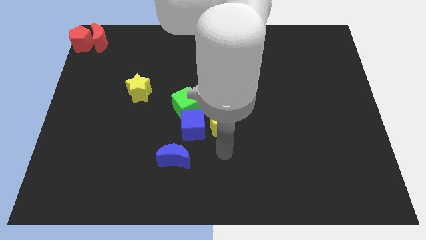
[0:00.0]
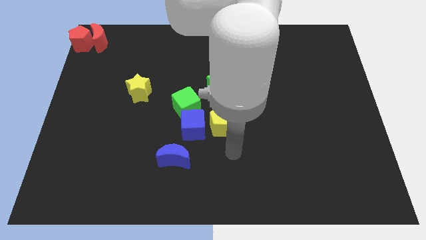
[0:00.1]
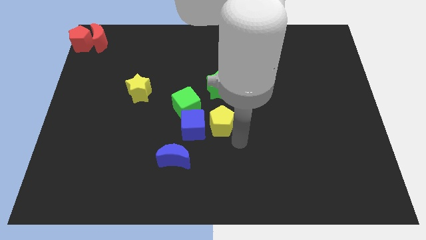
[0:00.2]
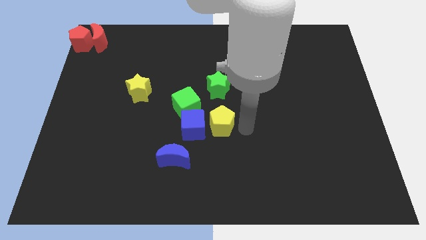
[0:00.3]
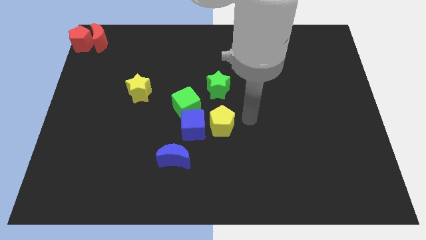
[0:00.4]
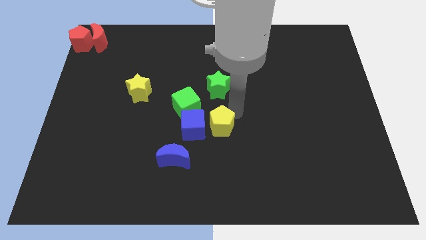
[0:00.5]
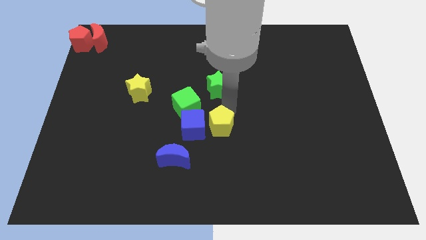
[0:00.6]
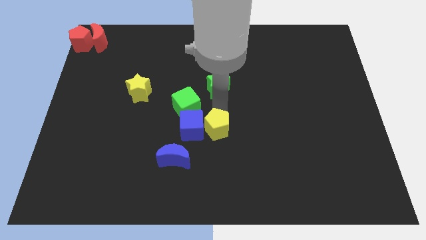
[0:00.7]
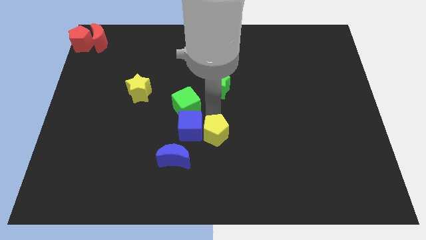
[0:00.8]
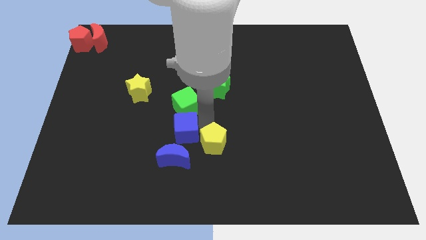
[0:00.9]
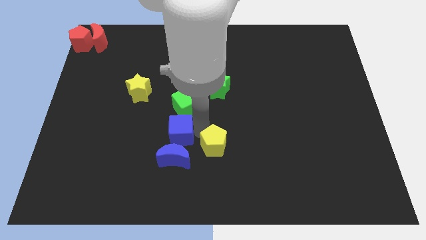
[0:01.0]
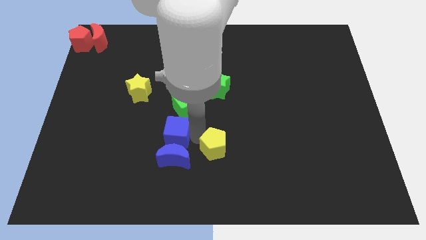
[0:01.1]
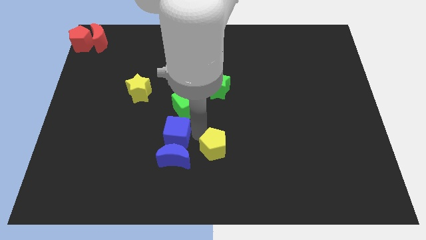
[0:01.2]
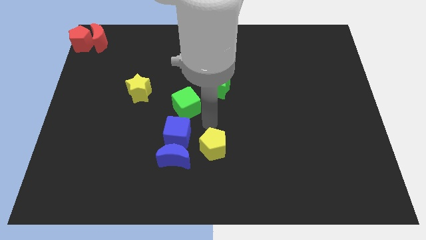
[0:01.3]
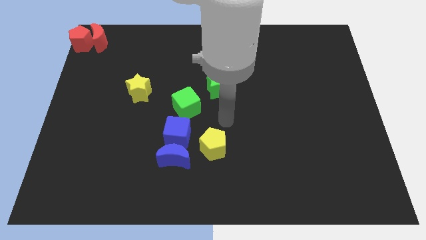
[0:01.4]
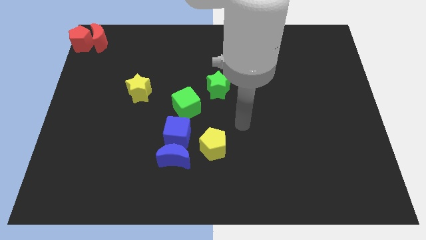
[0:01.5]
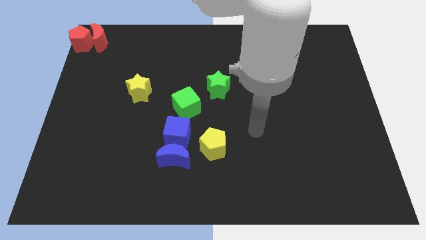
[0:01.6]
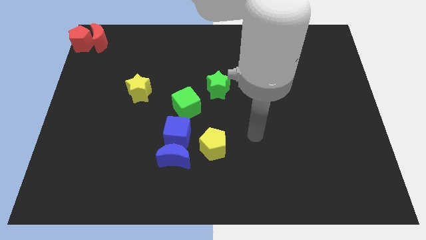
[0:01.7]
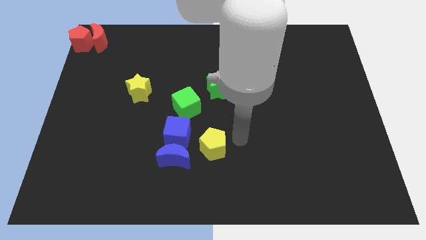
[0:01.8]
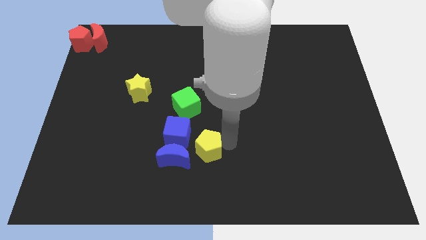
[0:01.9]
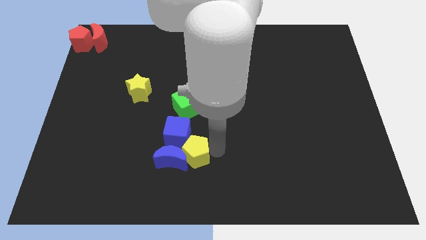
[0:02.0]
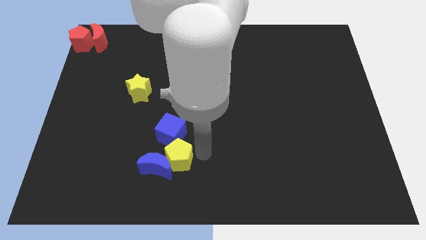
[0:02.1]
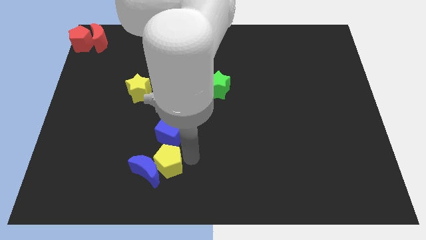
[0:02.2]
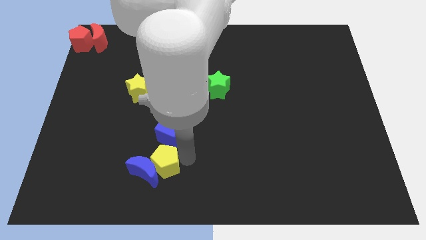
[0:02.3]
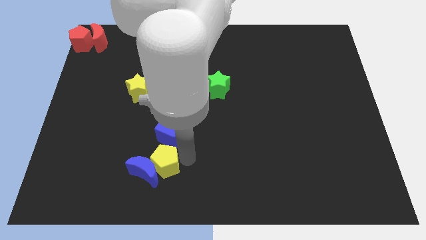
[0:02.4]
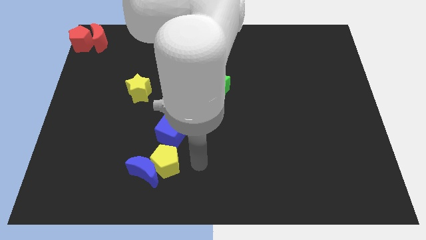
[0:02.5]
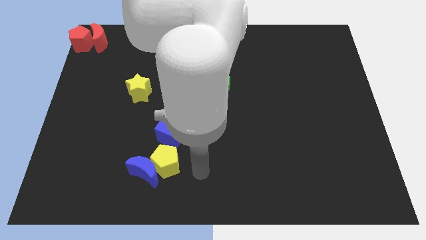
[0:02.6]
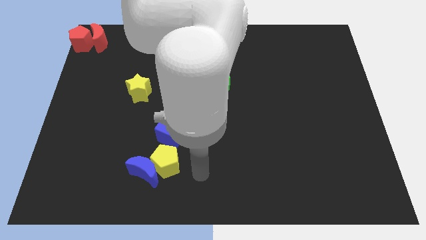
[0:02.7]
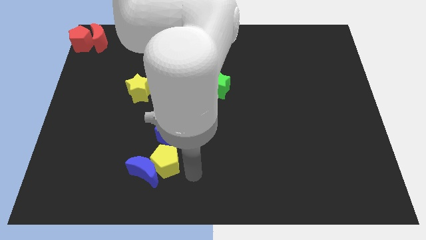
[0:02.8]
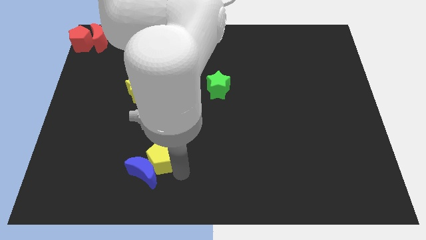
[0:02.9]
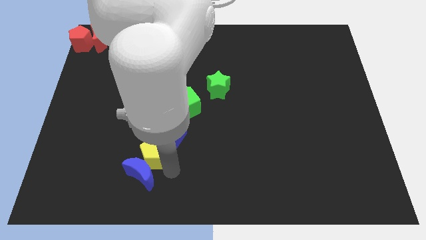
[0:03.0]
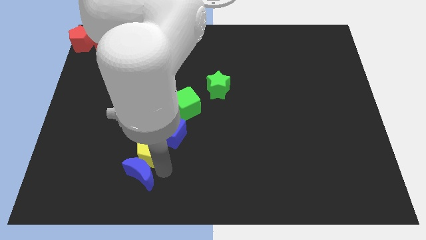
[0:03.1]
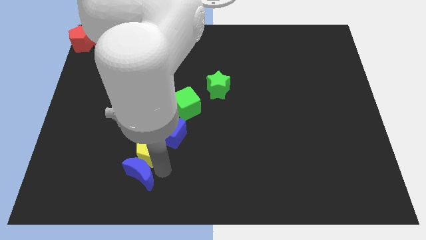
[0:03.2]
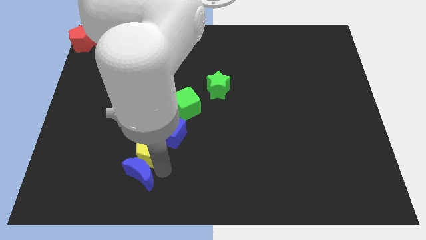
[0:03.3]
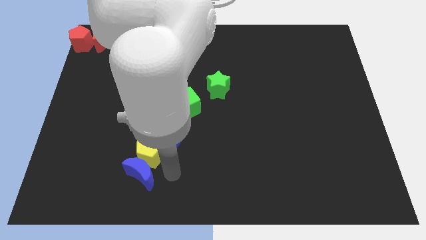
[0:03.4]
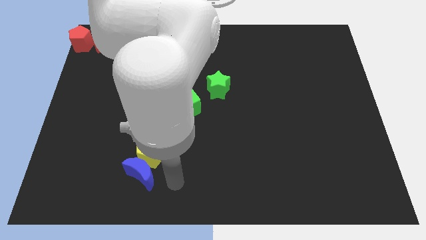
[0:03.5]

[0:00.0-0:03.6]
place yellow pentagon in between blue blocks

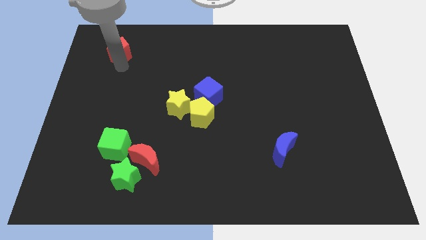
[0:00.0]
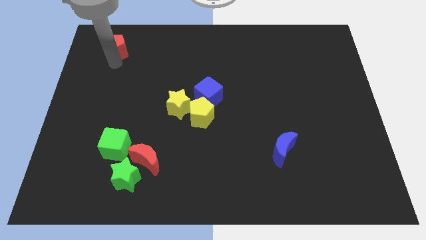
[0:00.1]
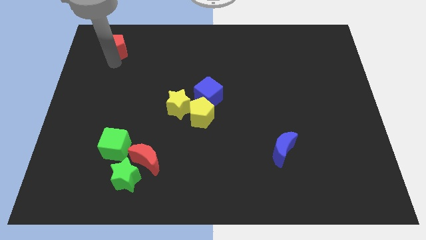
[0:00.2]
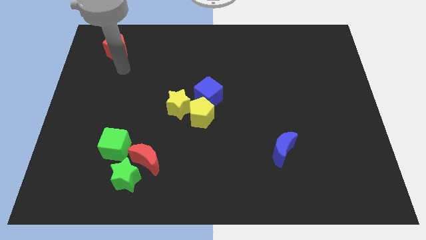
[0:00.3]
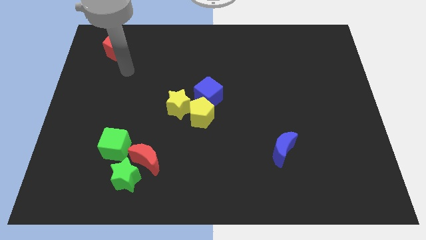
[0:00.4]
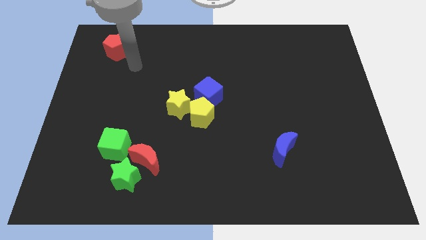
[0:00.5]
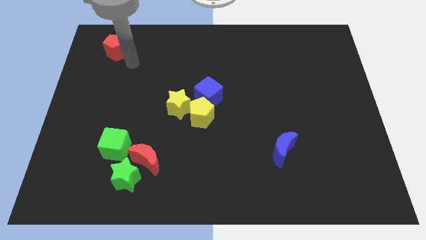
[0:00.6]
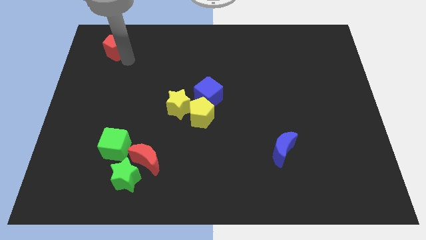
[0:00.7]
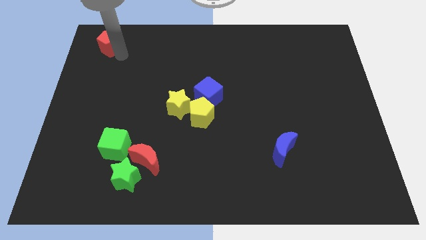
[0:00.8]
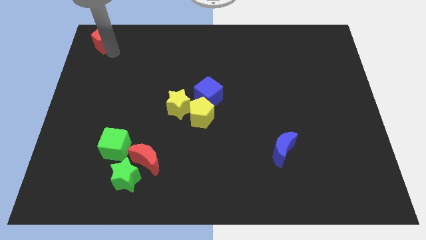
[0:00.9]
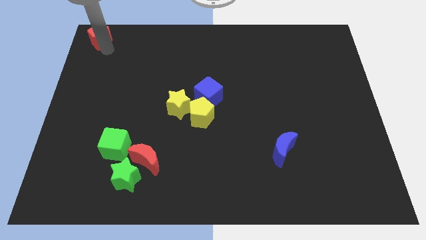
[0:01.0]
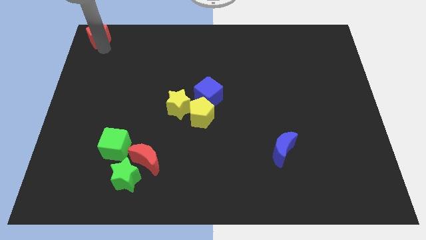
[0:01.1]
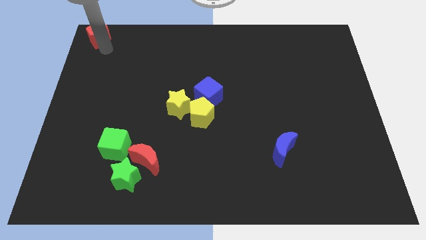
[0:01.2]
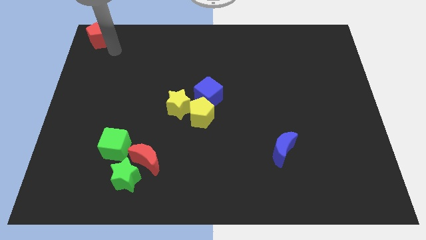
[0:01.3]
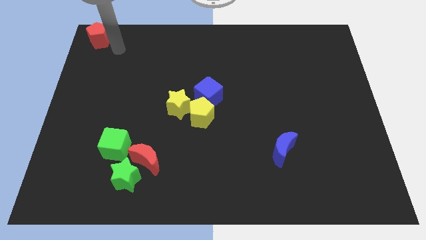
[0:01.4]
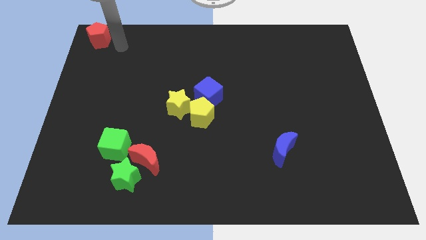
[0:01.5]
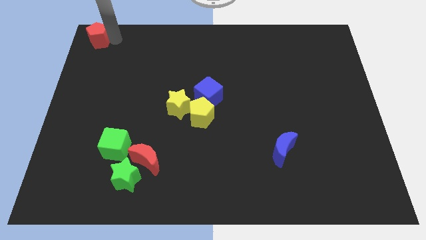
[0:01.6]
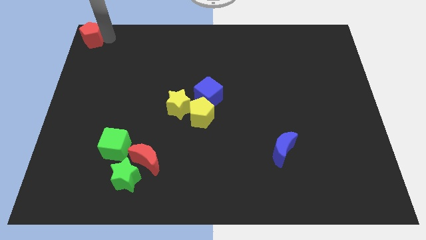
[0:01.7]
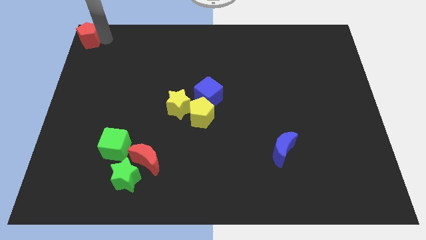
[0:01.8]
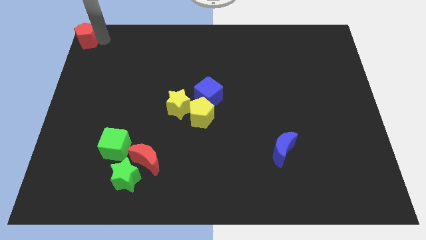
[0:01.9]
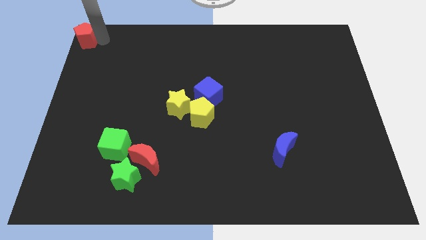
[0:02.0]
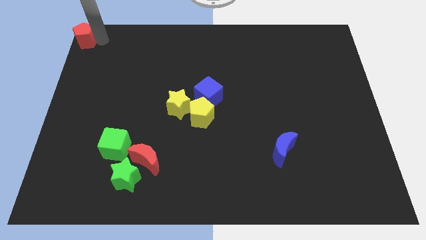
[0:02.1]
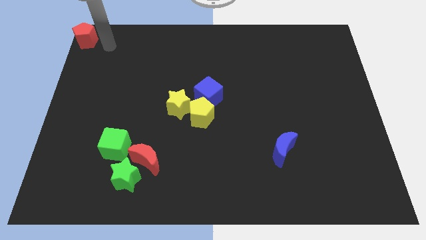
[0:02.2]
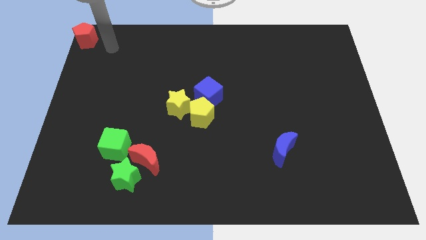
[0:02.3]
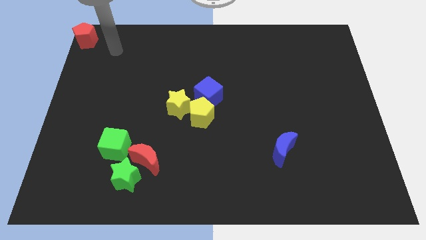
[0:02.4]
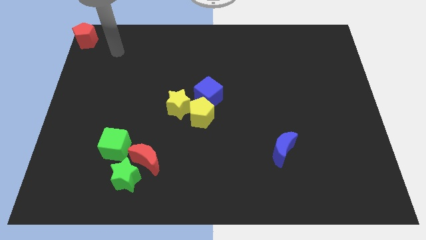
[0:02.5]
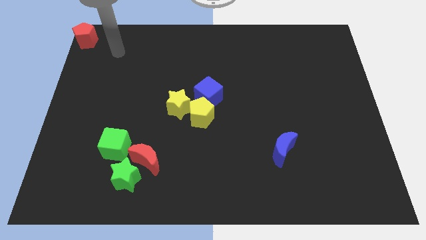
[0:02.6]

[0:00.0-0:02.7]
move the red pentagon to the top left of the board

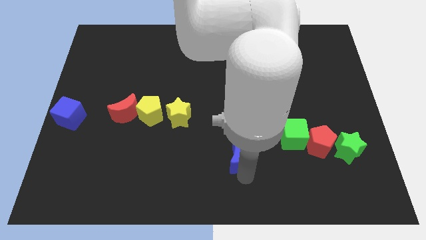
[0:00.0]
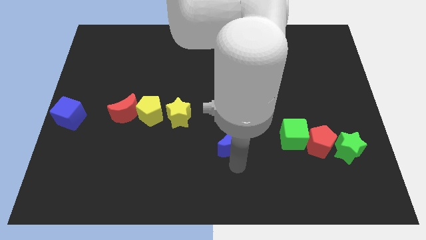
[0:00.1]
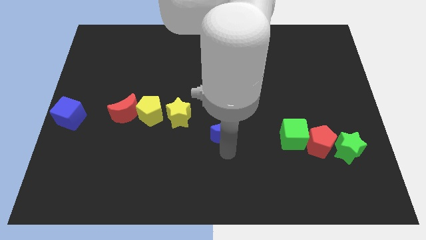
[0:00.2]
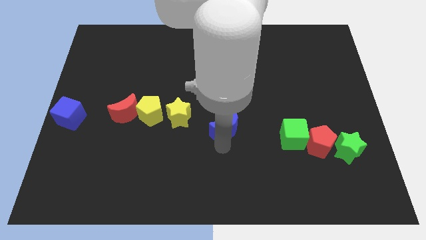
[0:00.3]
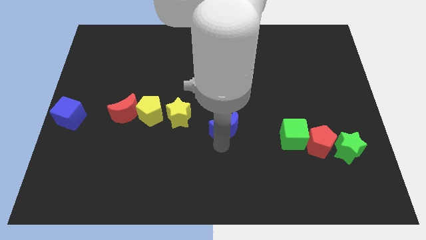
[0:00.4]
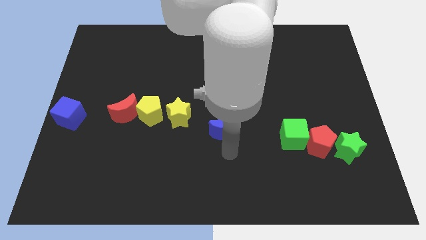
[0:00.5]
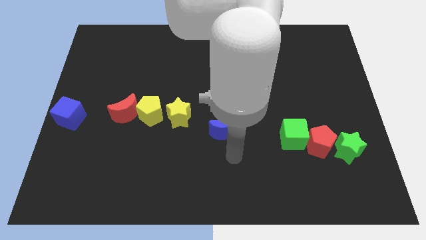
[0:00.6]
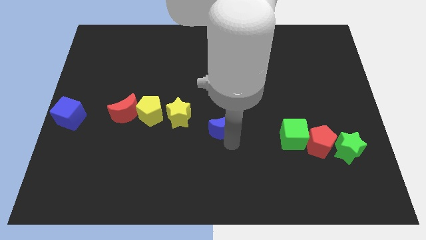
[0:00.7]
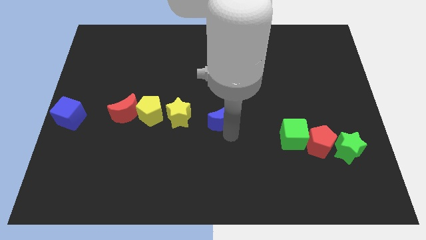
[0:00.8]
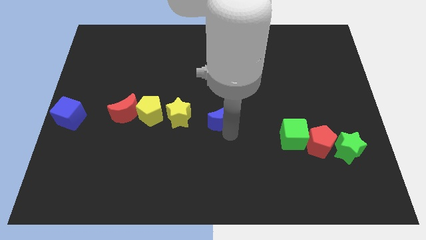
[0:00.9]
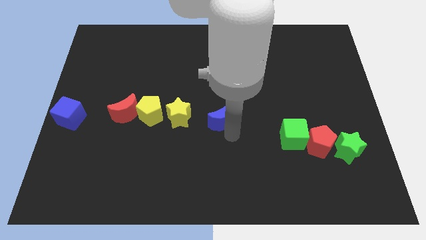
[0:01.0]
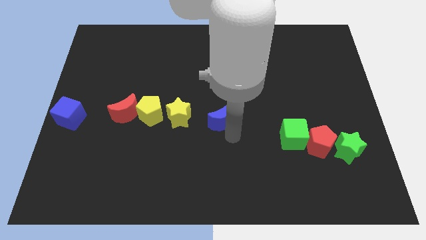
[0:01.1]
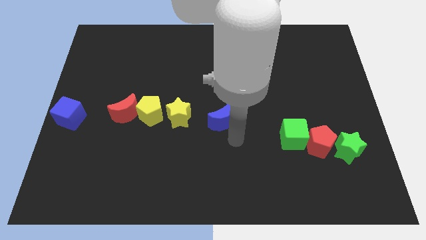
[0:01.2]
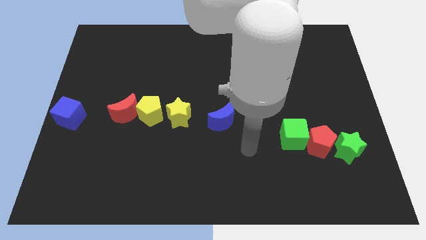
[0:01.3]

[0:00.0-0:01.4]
push the blue crescent to the right side of the yellow star

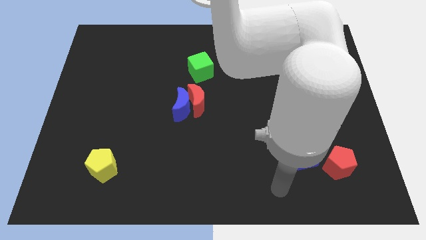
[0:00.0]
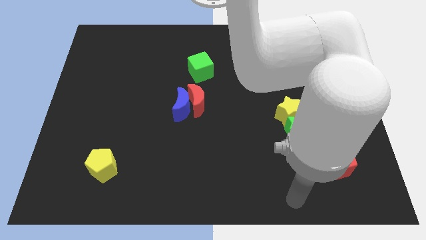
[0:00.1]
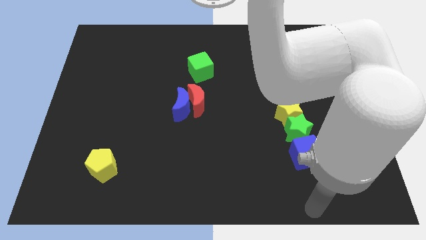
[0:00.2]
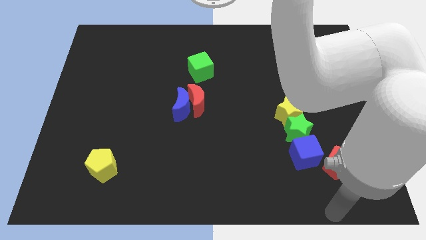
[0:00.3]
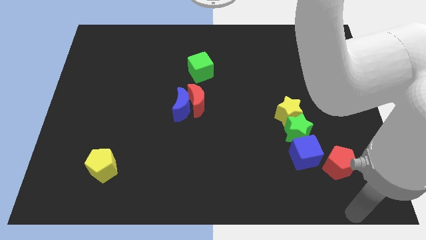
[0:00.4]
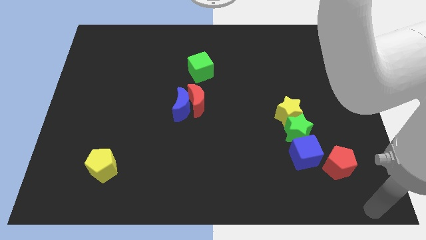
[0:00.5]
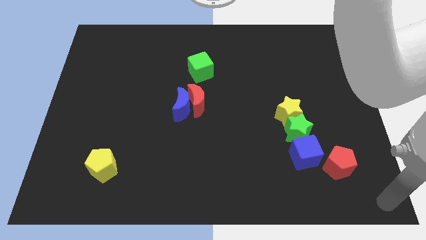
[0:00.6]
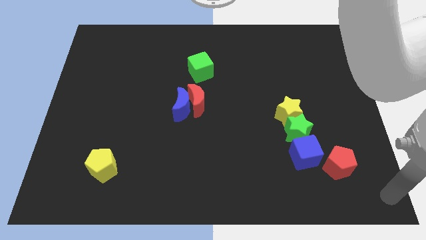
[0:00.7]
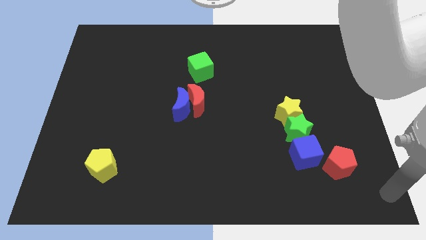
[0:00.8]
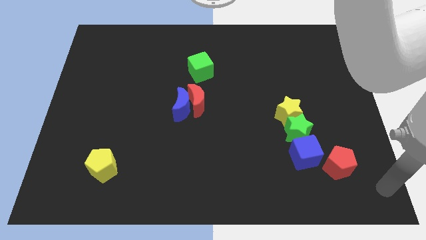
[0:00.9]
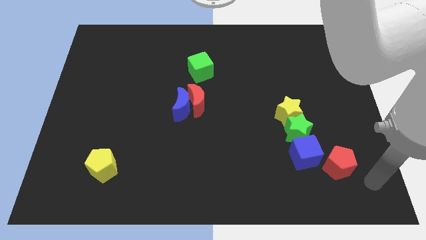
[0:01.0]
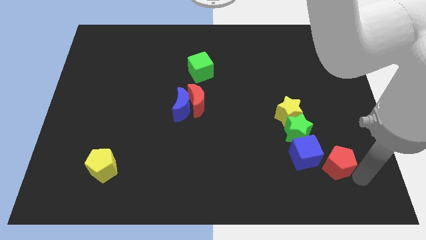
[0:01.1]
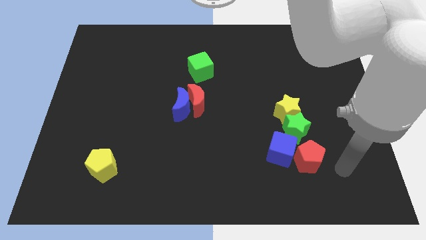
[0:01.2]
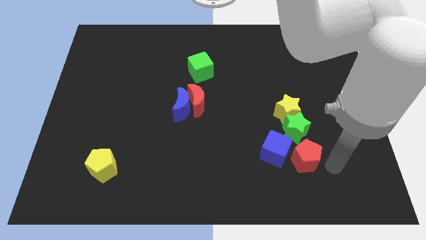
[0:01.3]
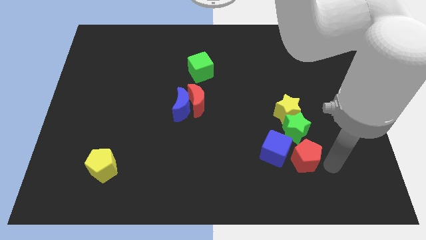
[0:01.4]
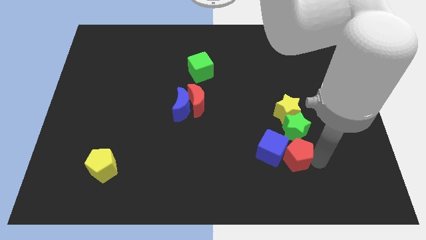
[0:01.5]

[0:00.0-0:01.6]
drag the red pentagon into the blue cube
